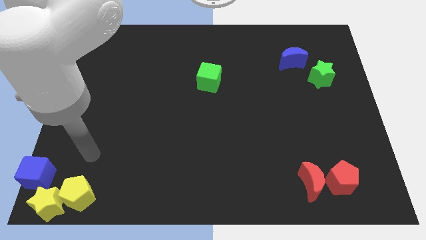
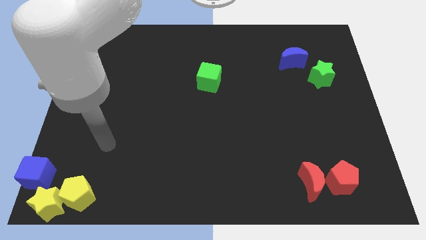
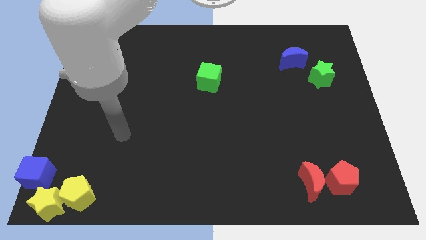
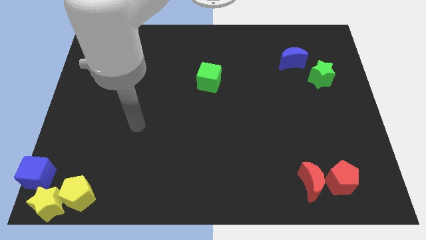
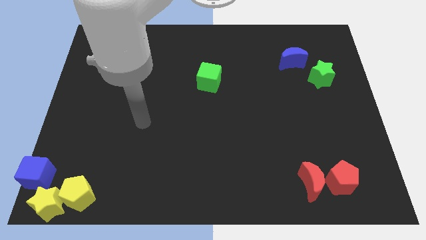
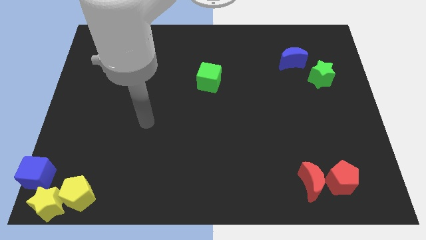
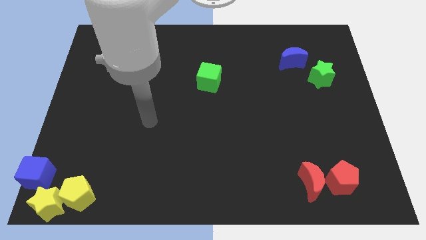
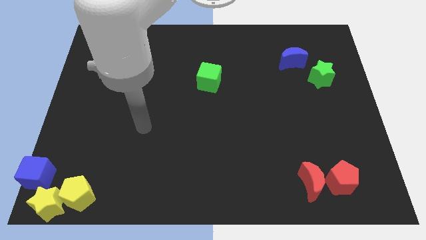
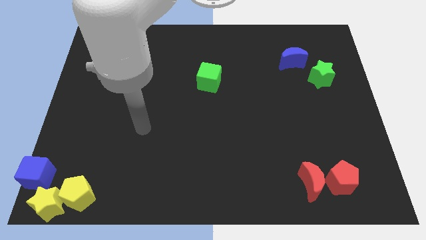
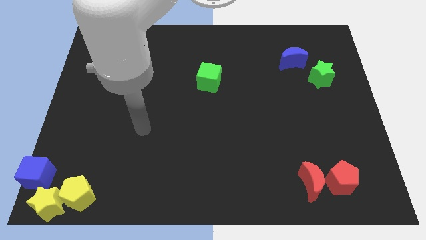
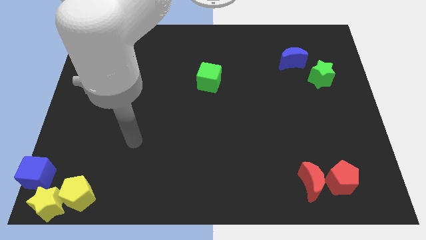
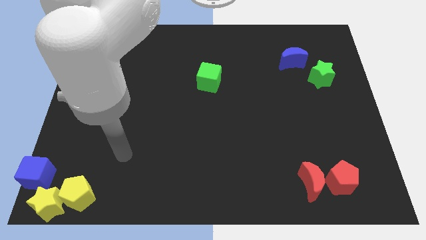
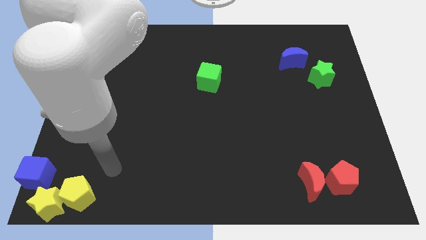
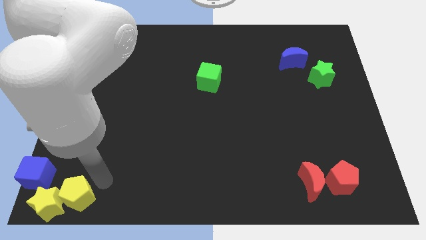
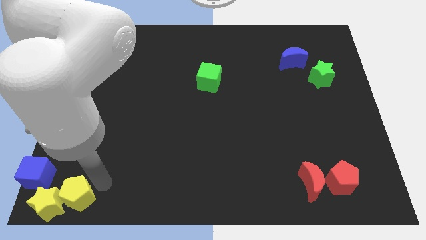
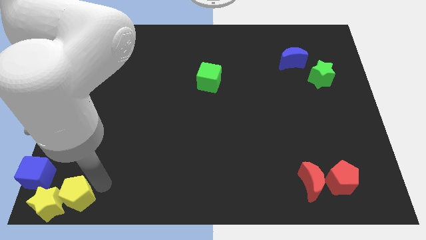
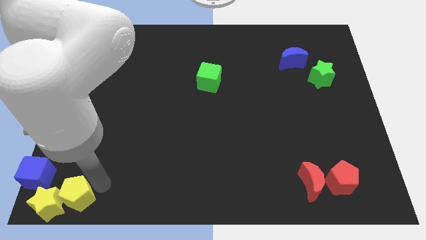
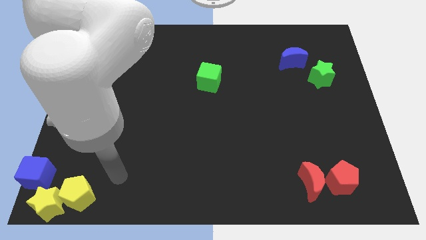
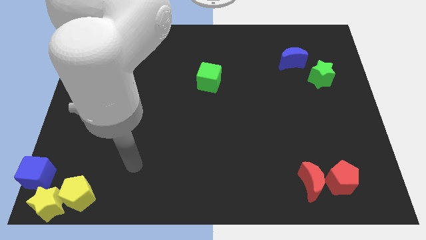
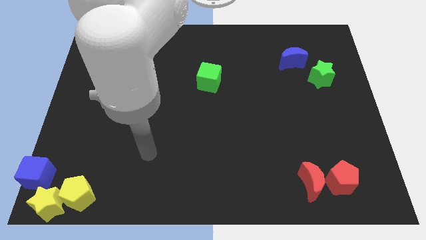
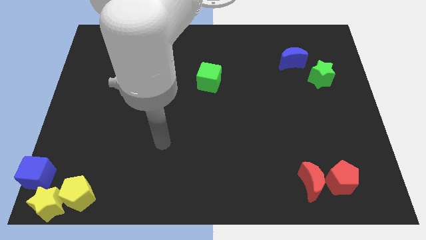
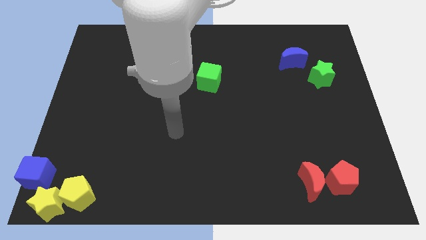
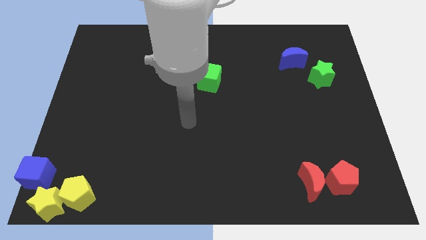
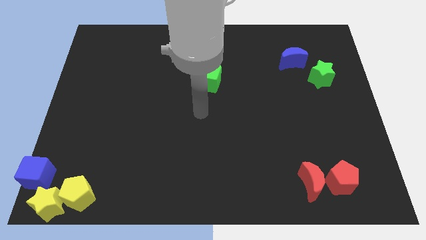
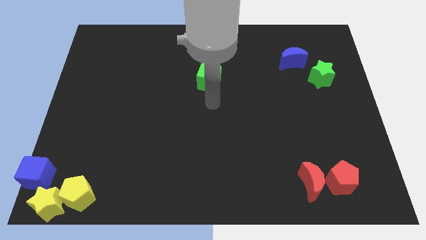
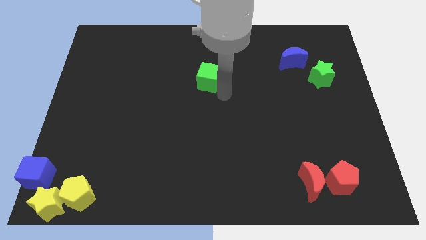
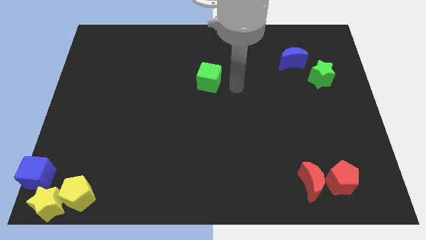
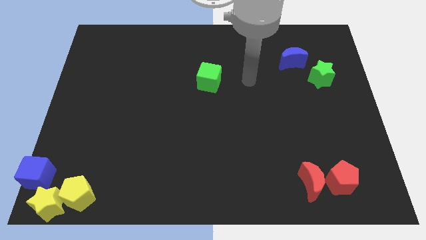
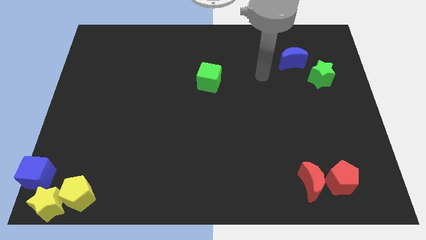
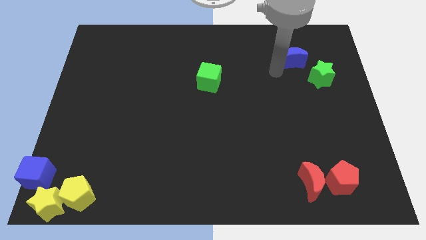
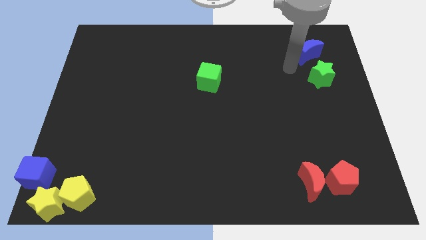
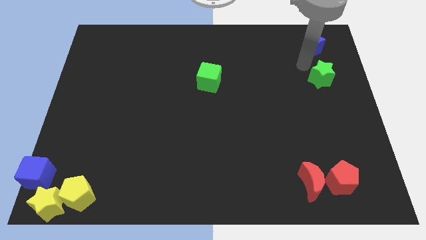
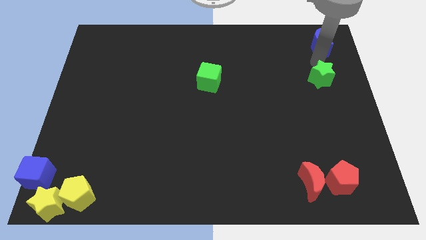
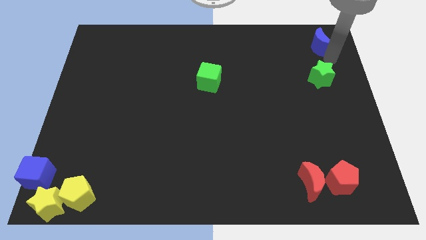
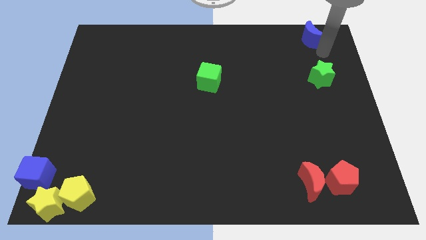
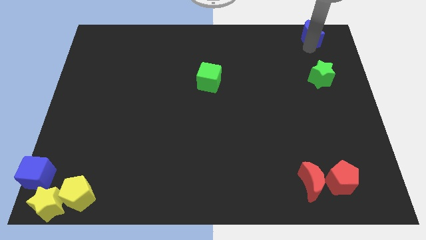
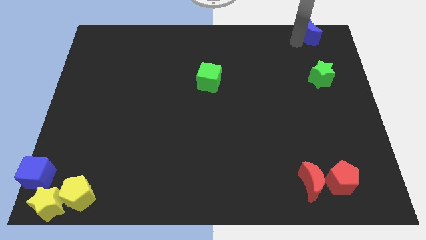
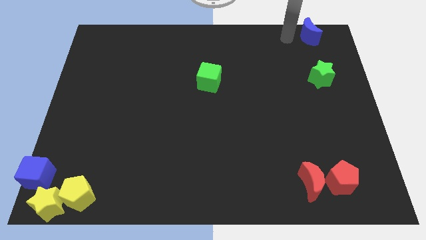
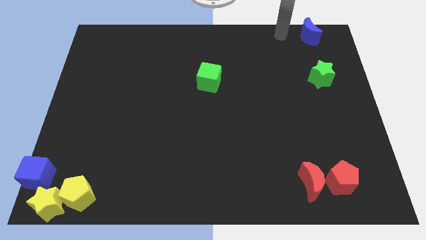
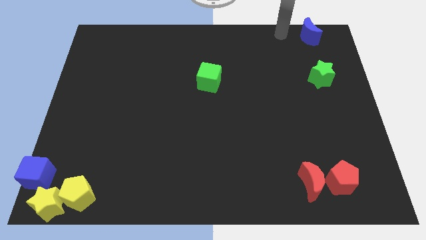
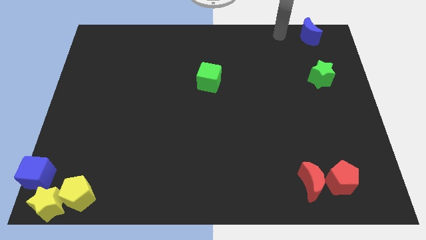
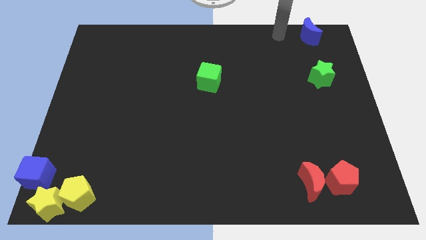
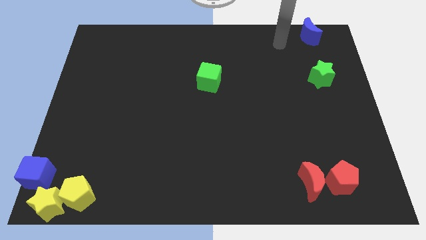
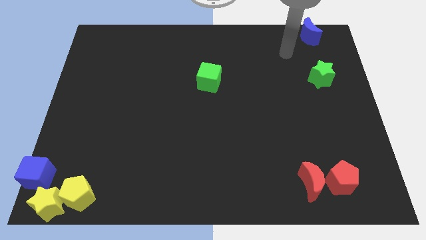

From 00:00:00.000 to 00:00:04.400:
place the blue crescent vertically above the top side of the green star

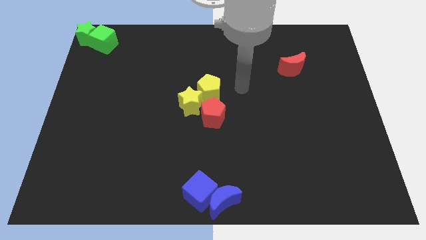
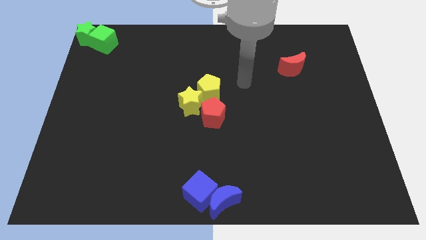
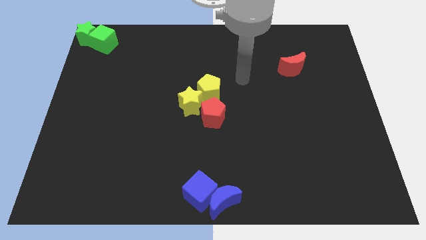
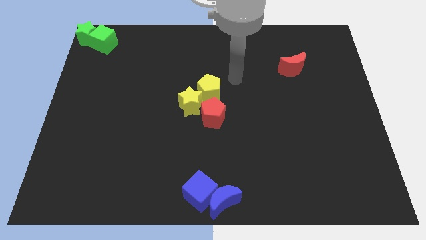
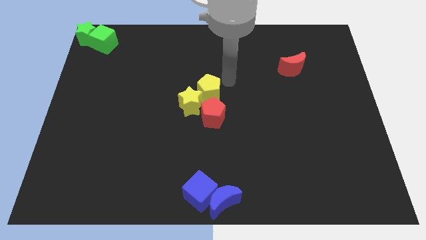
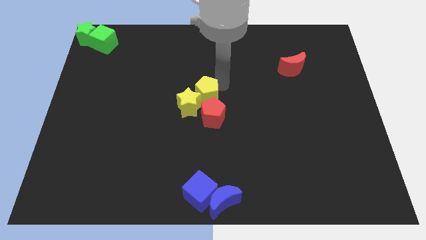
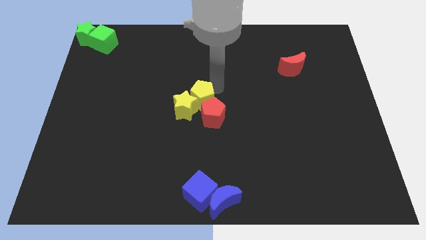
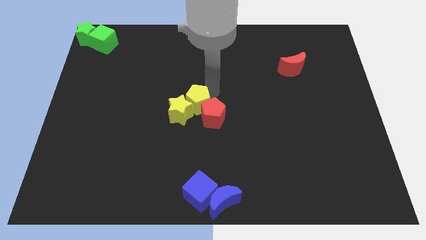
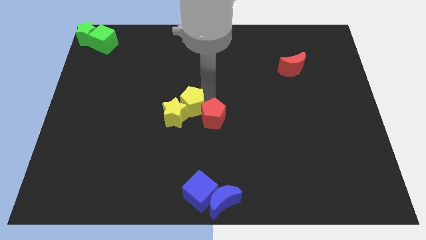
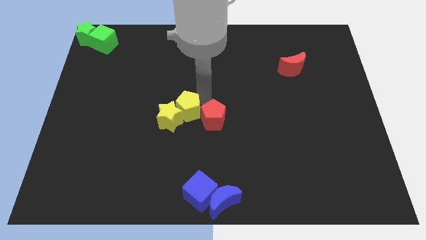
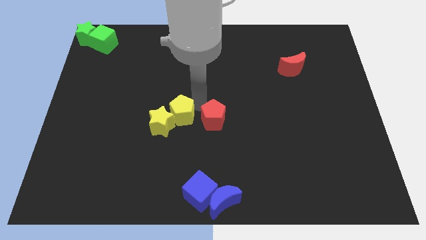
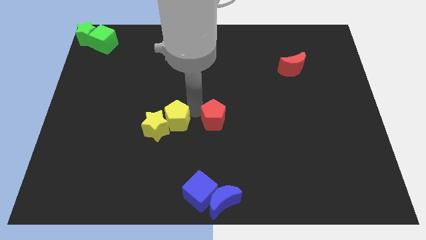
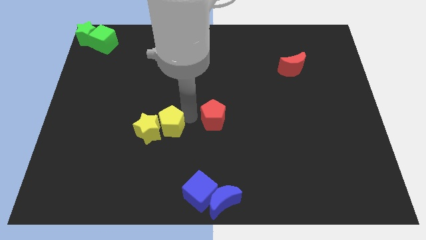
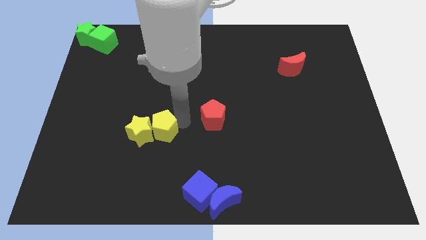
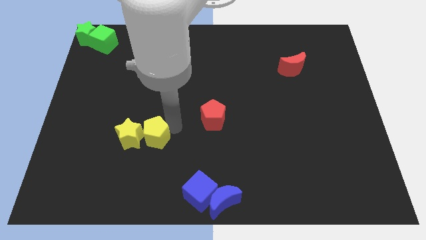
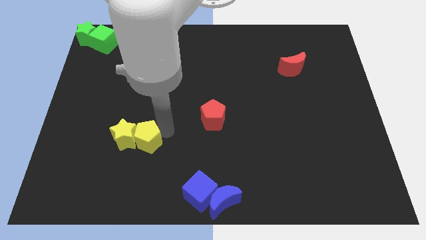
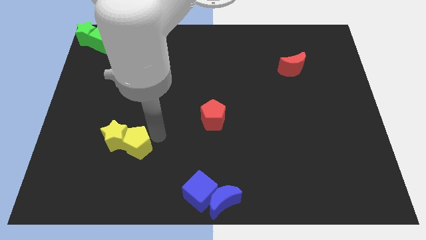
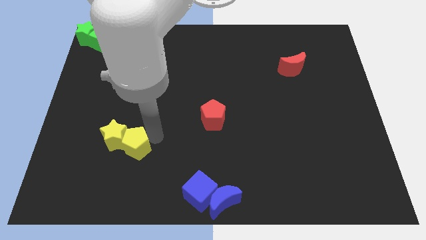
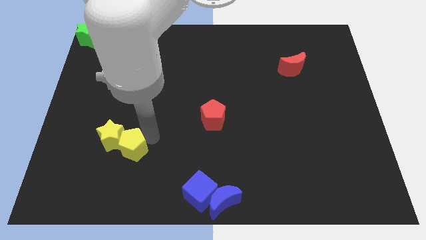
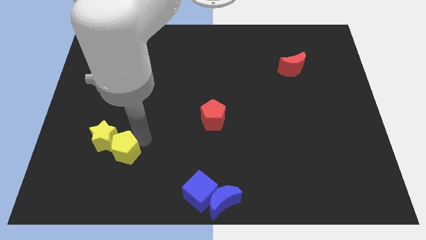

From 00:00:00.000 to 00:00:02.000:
push the yellow blocks slightly towards left side down

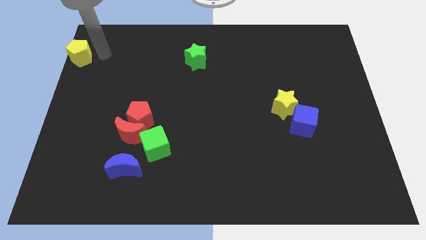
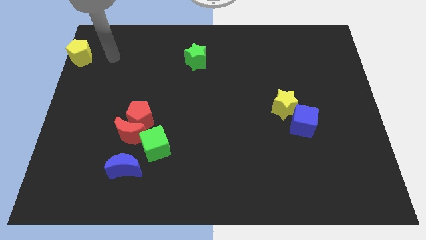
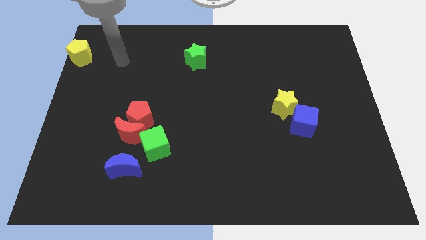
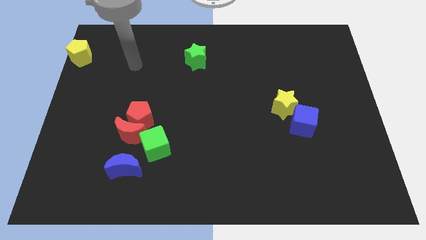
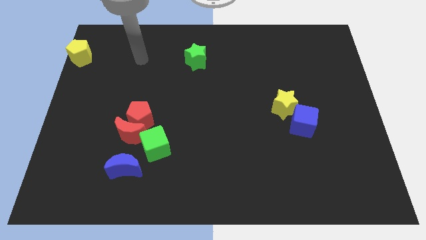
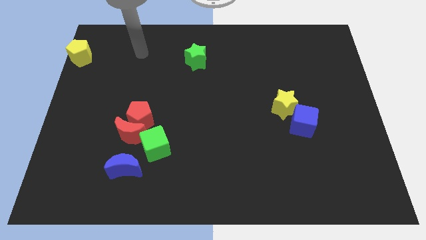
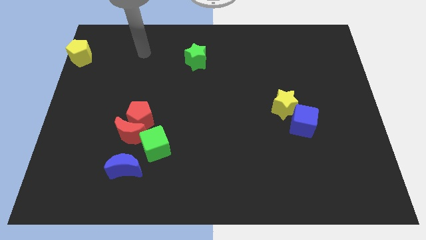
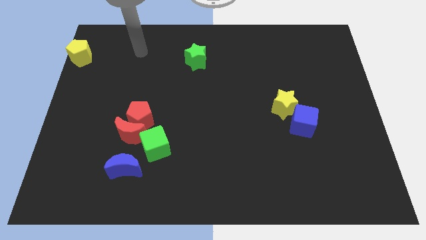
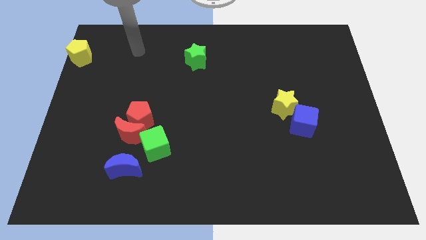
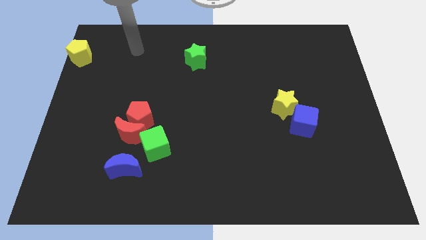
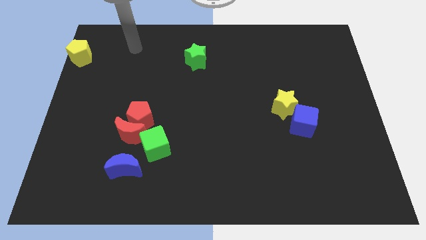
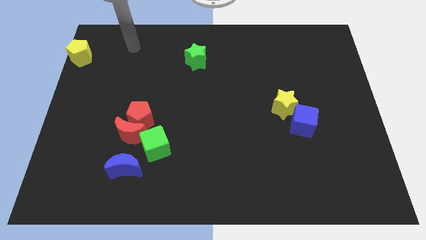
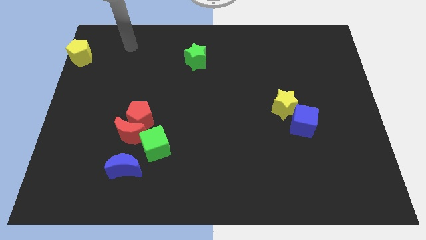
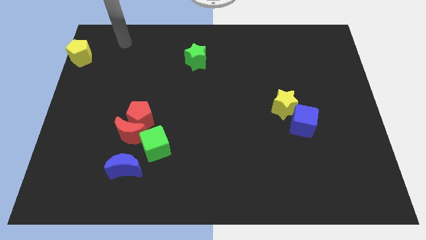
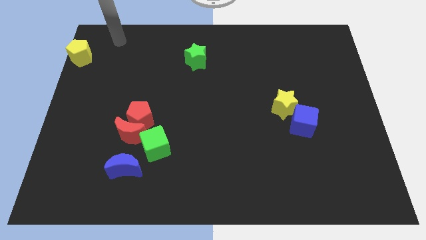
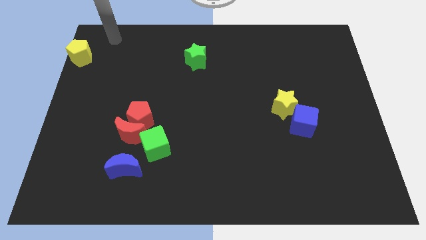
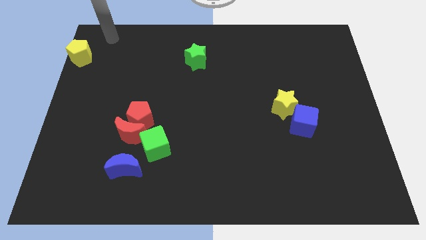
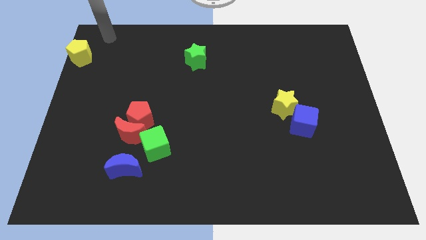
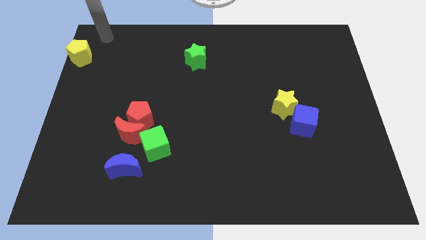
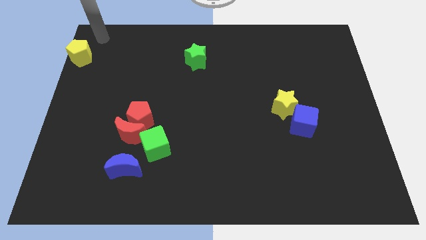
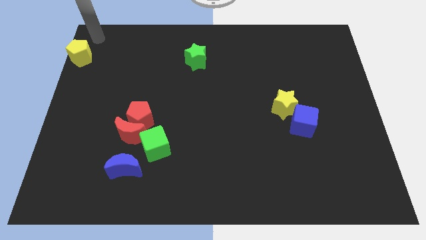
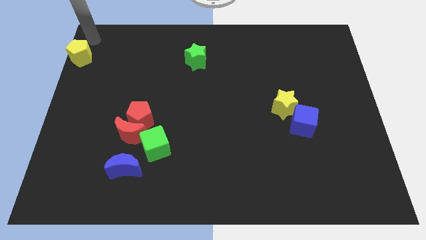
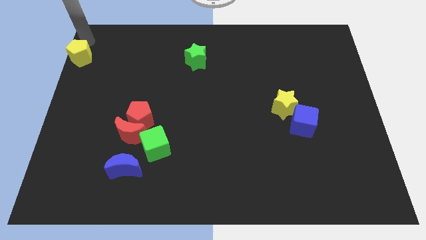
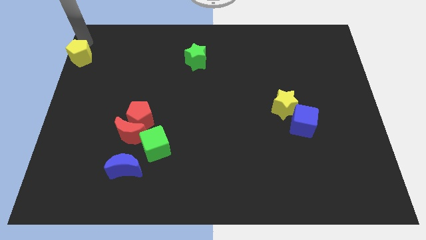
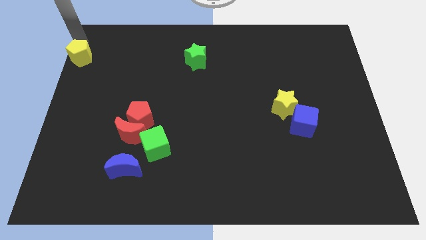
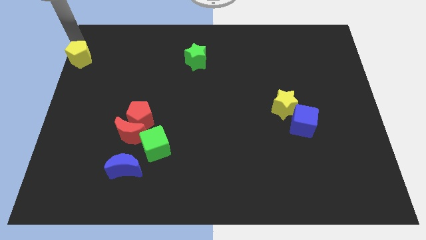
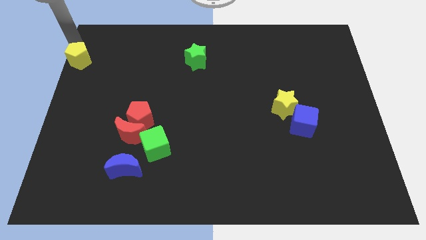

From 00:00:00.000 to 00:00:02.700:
point the arm at the top of the yellow pentagon
